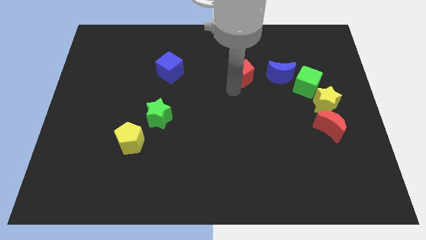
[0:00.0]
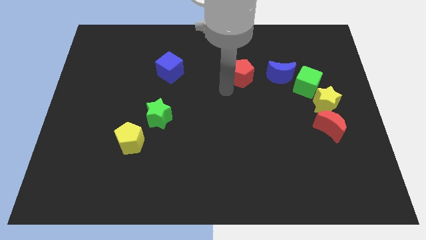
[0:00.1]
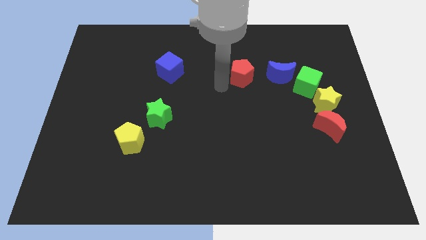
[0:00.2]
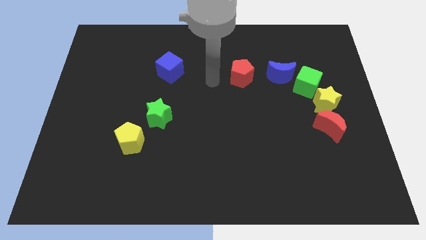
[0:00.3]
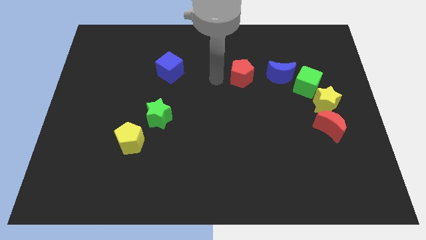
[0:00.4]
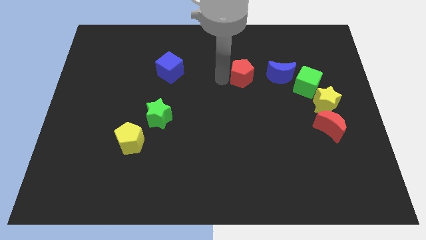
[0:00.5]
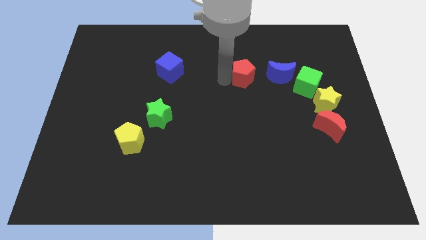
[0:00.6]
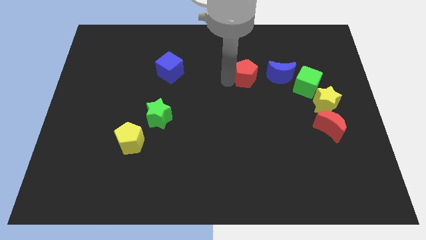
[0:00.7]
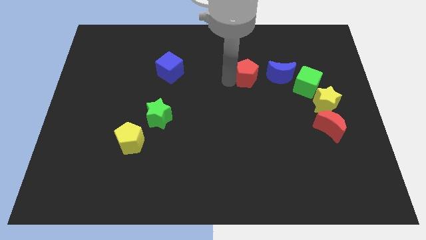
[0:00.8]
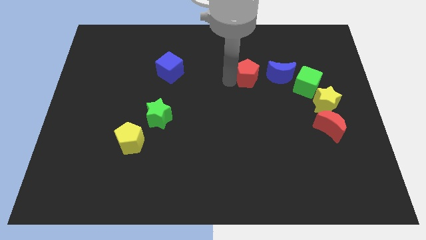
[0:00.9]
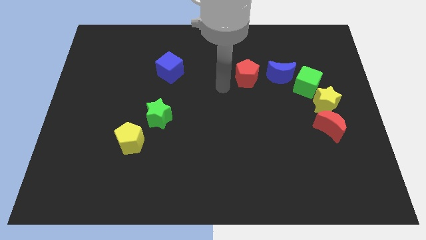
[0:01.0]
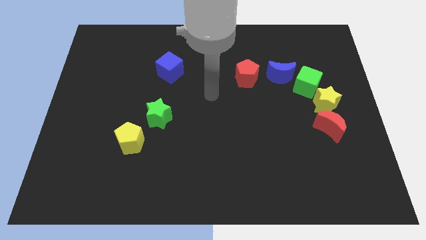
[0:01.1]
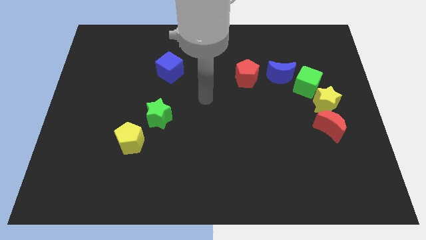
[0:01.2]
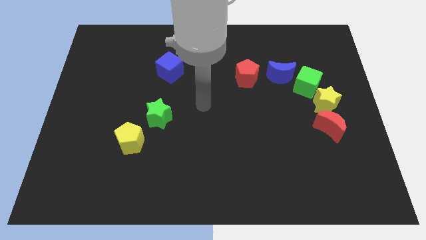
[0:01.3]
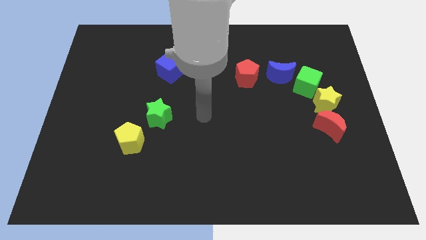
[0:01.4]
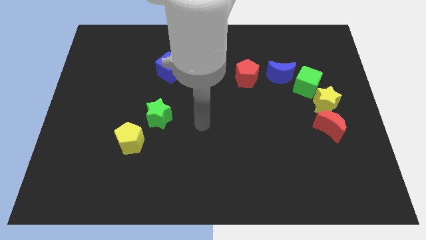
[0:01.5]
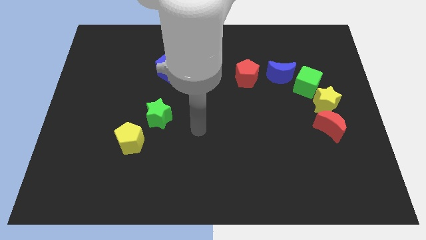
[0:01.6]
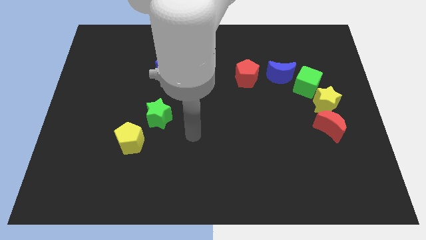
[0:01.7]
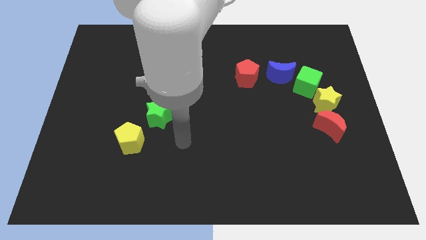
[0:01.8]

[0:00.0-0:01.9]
move the red pentagon to the left of the blue crescent

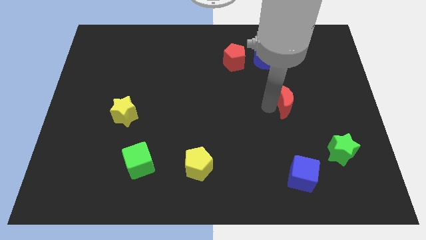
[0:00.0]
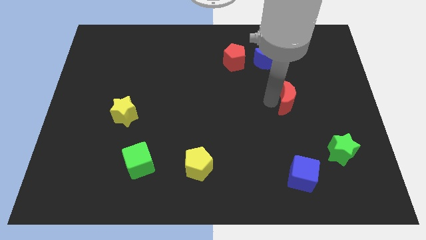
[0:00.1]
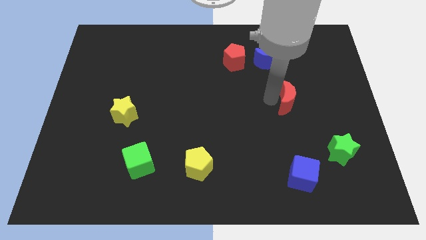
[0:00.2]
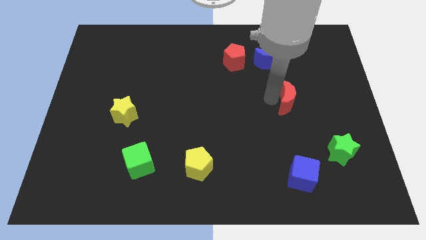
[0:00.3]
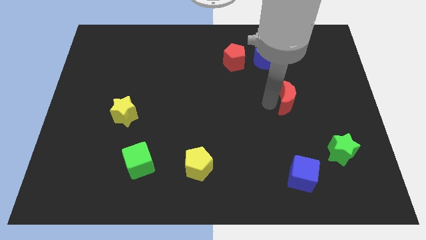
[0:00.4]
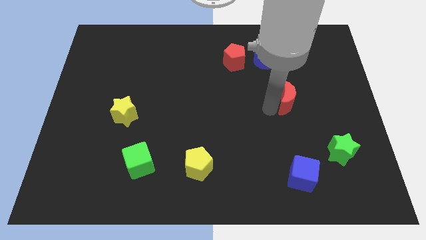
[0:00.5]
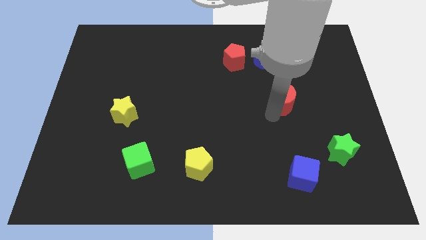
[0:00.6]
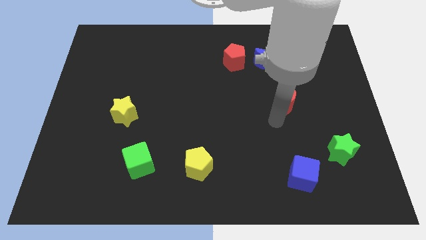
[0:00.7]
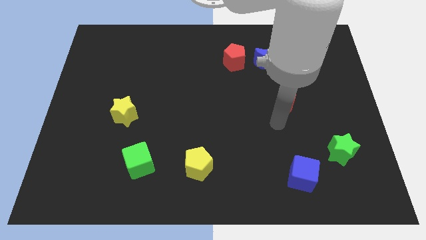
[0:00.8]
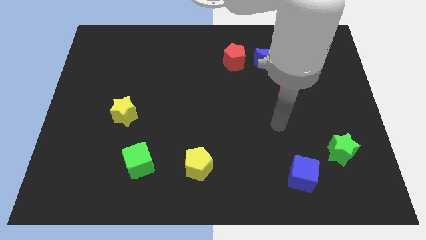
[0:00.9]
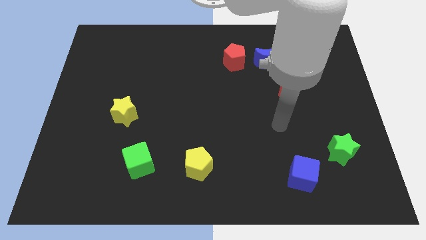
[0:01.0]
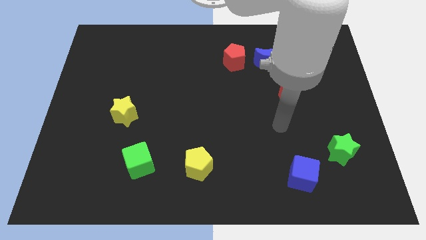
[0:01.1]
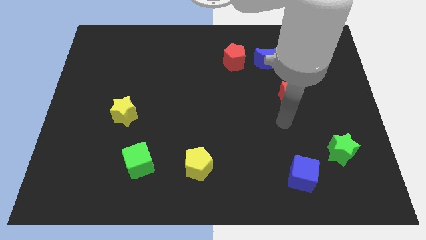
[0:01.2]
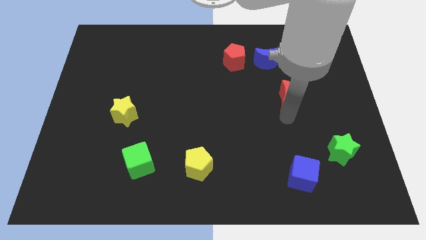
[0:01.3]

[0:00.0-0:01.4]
move red moon slightly up

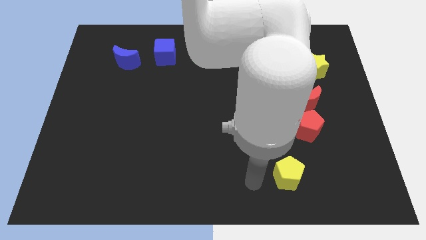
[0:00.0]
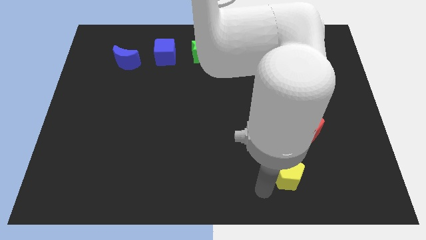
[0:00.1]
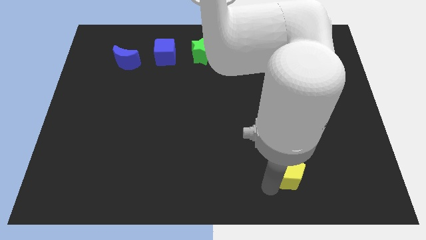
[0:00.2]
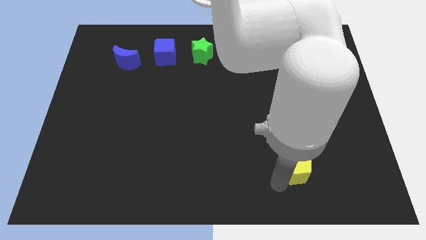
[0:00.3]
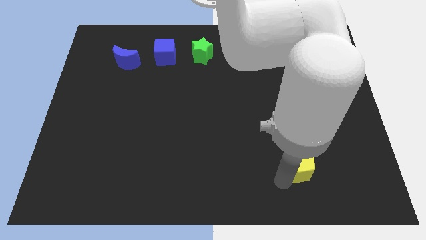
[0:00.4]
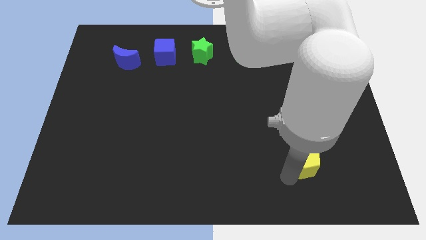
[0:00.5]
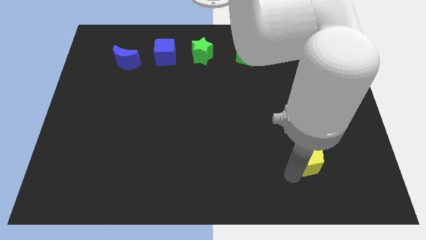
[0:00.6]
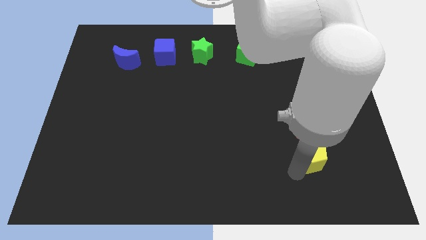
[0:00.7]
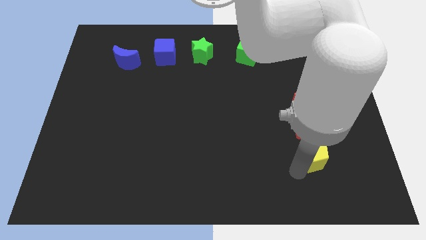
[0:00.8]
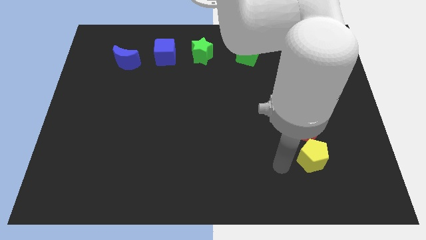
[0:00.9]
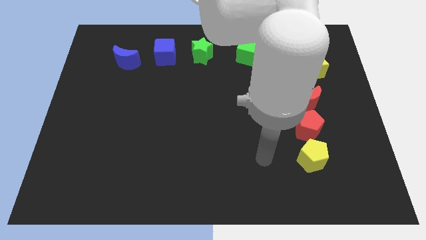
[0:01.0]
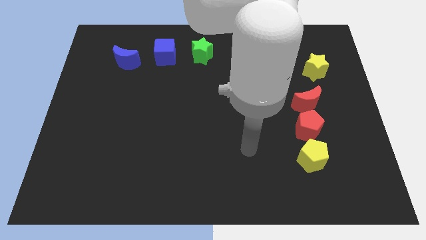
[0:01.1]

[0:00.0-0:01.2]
move the yellow pentagon vertical to the red pentagon

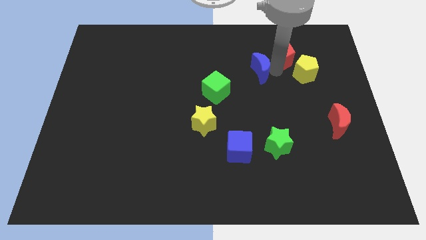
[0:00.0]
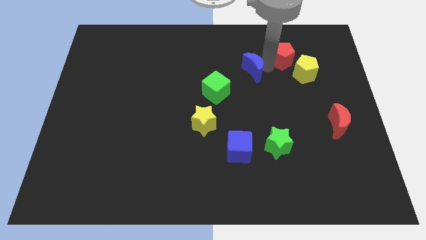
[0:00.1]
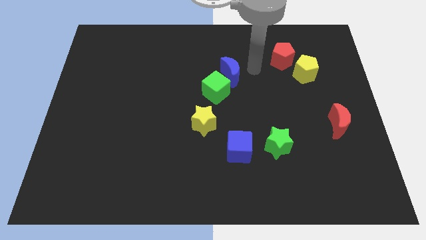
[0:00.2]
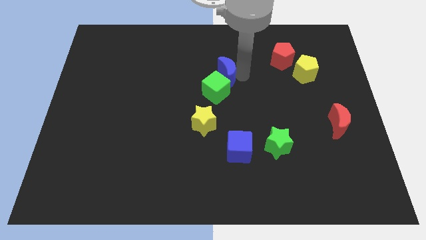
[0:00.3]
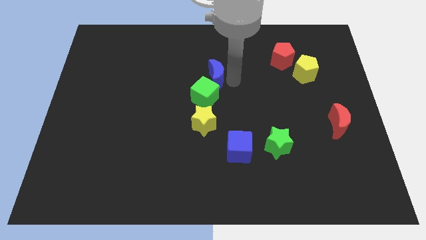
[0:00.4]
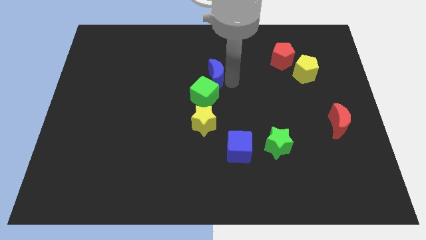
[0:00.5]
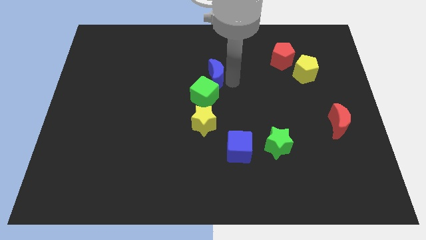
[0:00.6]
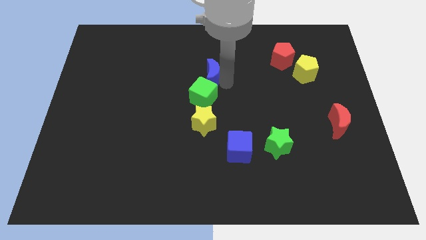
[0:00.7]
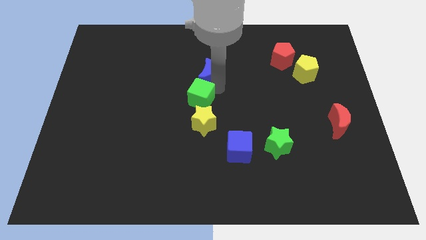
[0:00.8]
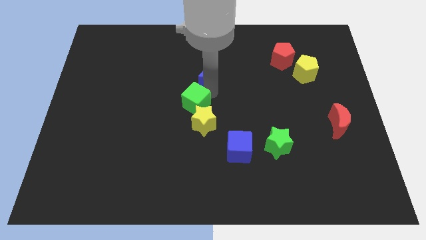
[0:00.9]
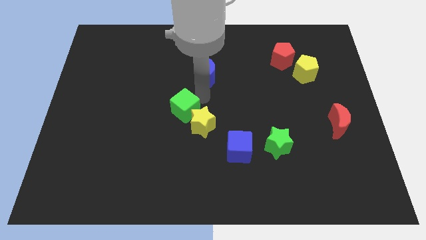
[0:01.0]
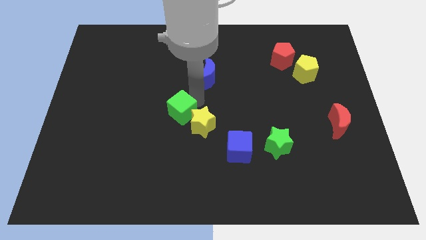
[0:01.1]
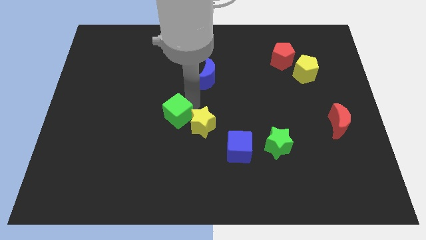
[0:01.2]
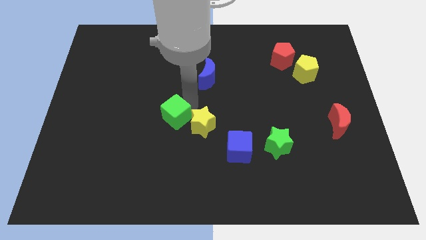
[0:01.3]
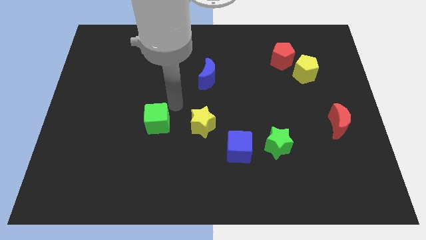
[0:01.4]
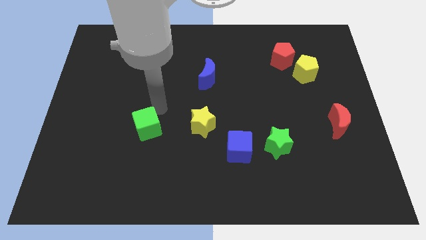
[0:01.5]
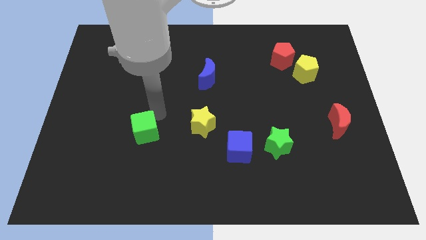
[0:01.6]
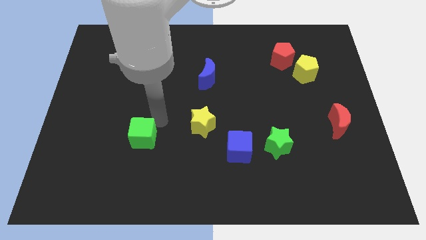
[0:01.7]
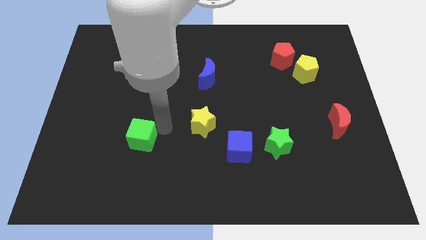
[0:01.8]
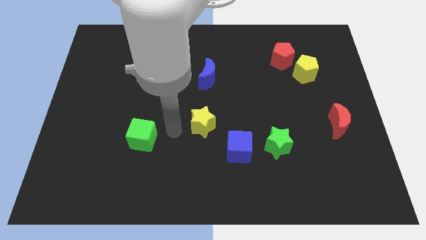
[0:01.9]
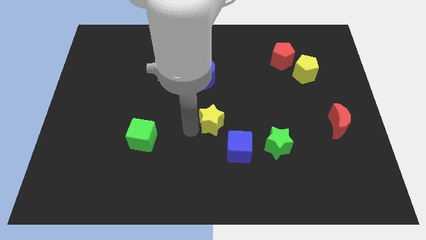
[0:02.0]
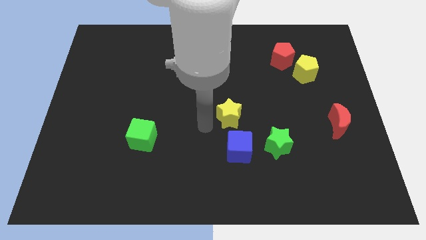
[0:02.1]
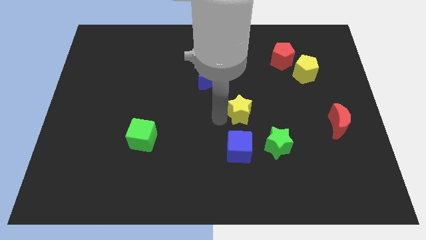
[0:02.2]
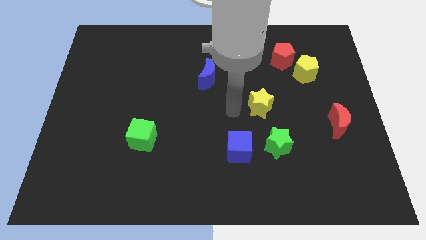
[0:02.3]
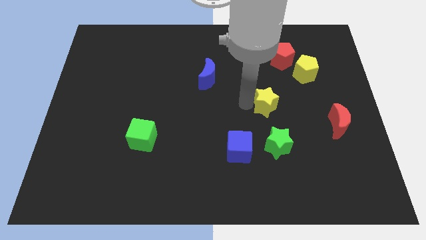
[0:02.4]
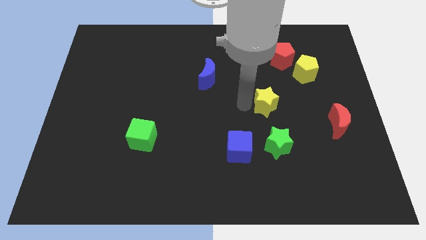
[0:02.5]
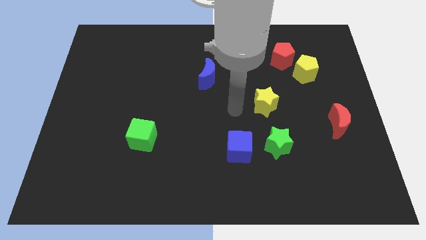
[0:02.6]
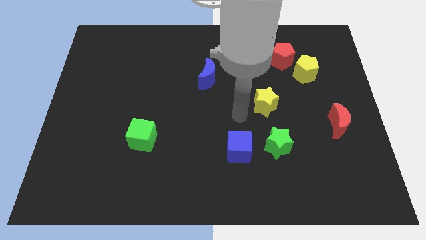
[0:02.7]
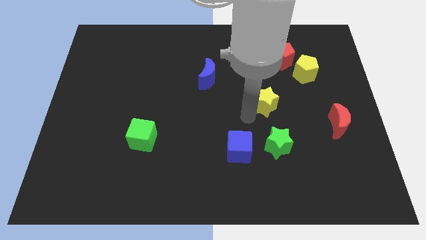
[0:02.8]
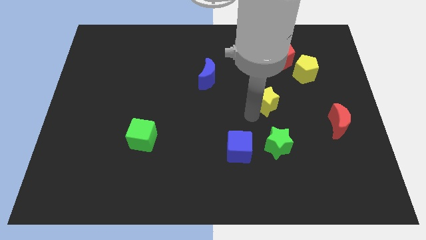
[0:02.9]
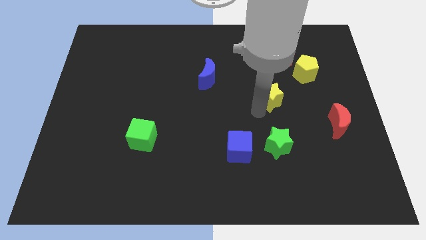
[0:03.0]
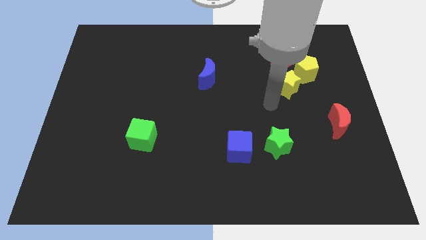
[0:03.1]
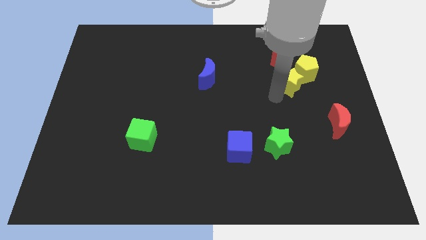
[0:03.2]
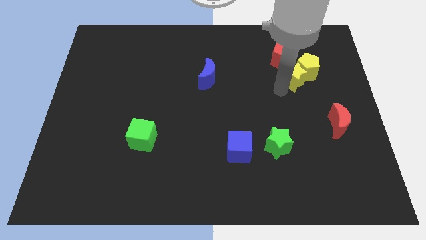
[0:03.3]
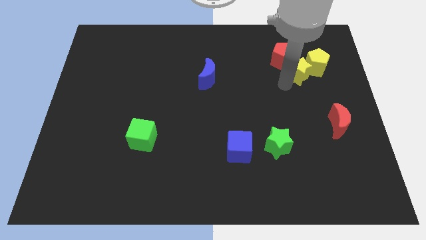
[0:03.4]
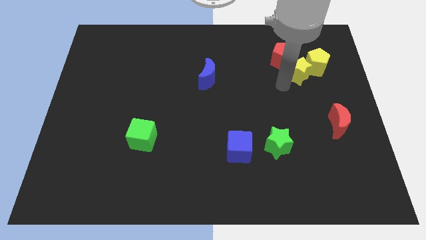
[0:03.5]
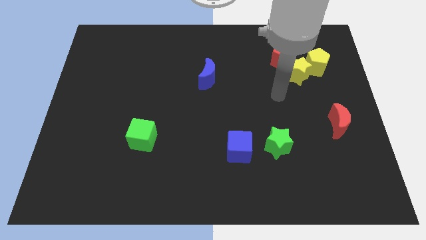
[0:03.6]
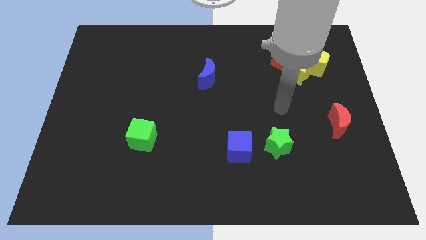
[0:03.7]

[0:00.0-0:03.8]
move the green cube to the left of the blue cube

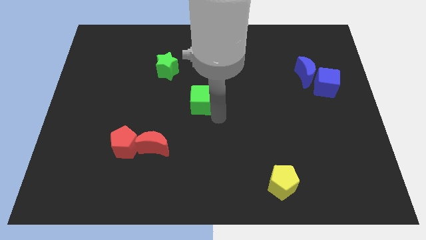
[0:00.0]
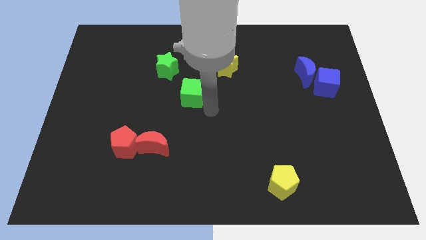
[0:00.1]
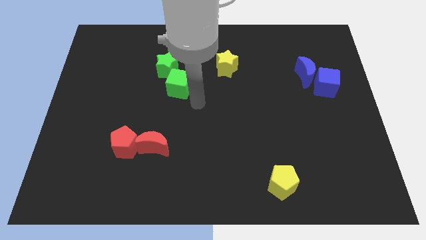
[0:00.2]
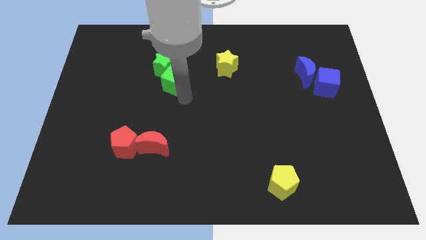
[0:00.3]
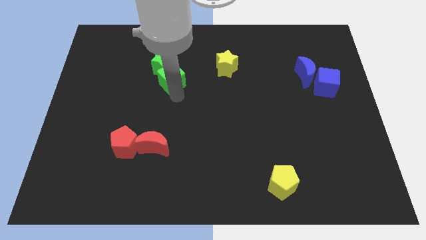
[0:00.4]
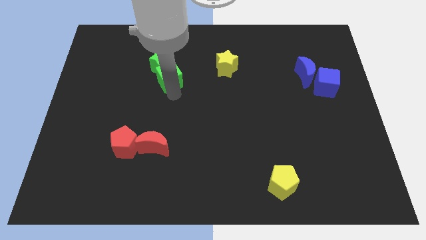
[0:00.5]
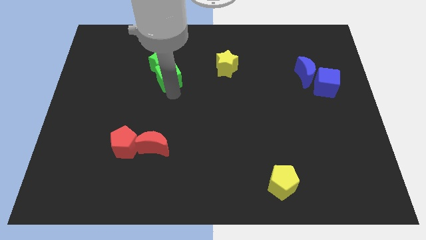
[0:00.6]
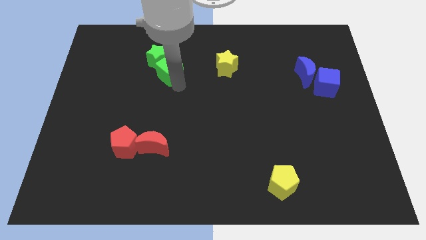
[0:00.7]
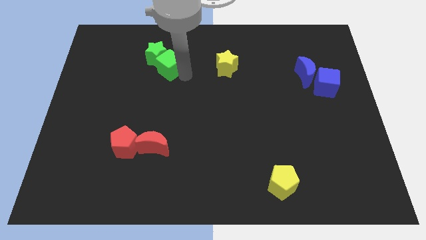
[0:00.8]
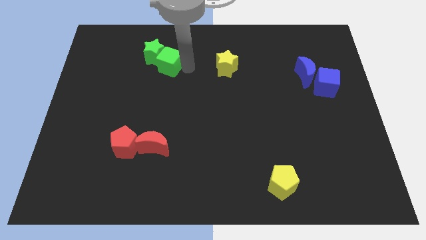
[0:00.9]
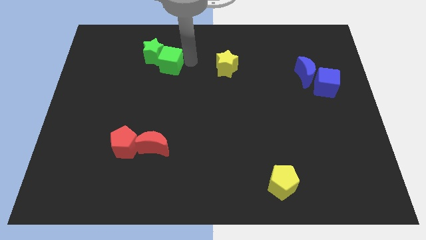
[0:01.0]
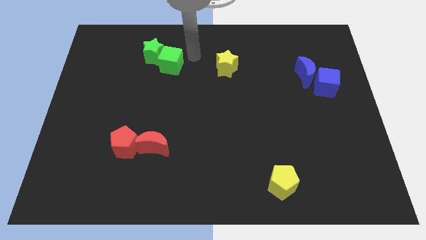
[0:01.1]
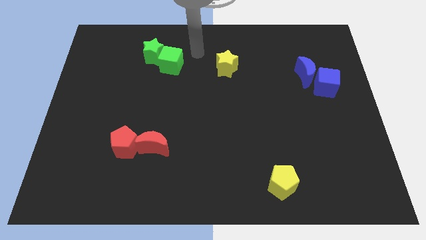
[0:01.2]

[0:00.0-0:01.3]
push green cube into the green star
